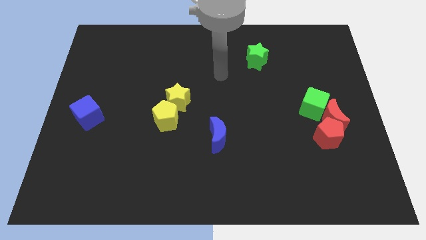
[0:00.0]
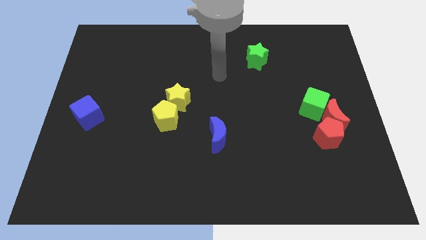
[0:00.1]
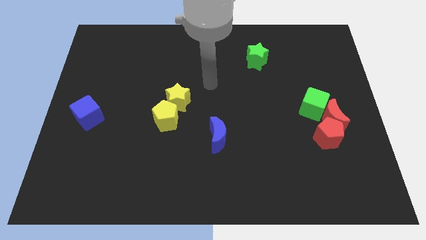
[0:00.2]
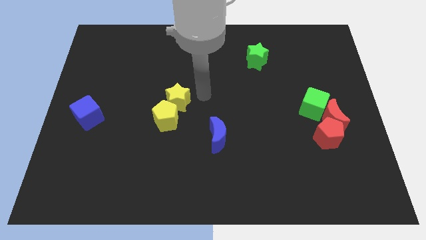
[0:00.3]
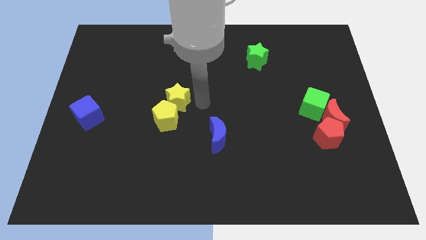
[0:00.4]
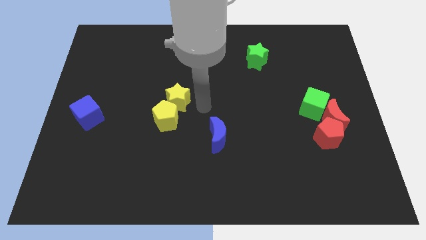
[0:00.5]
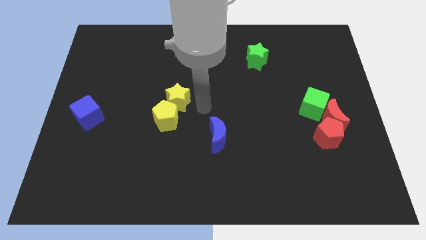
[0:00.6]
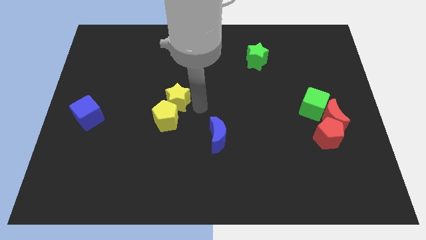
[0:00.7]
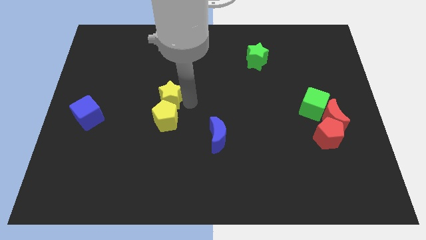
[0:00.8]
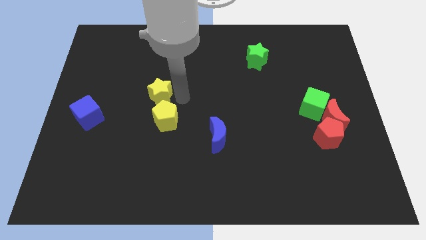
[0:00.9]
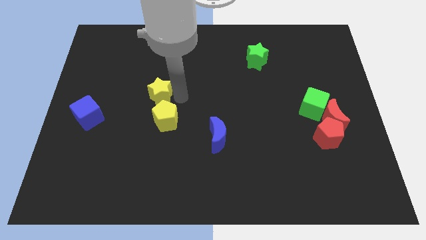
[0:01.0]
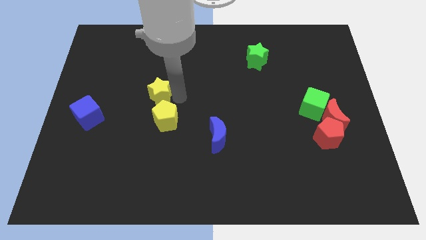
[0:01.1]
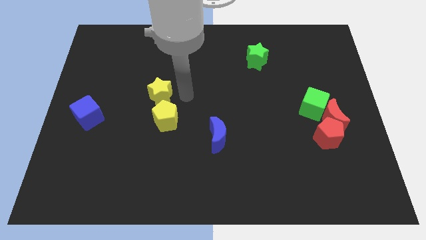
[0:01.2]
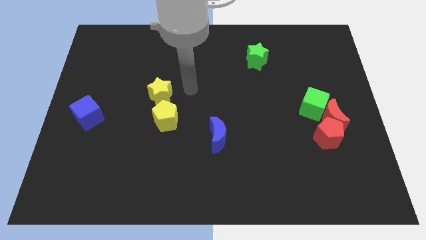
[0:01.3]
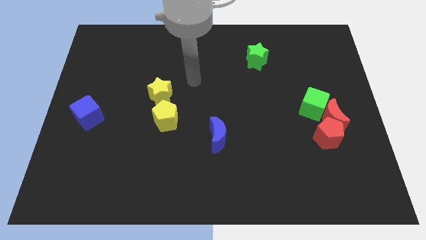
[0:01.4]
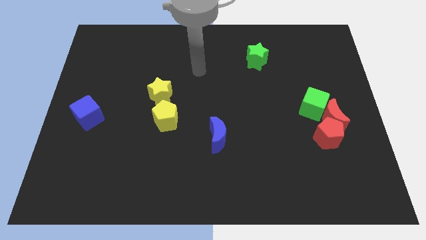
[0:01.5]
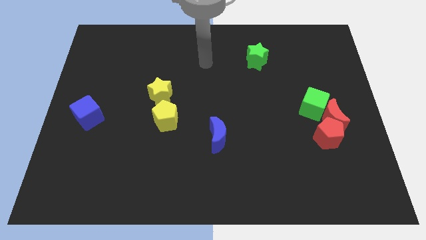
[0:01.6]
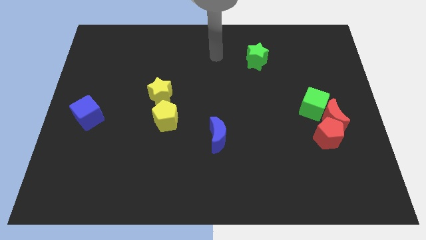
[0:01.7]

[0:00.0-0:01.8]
move the yellow star to the left side slightly

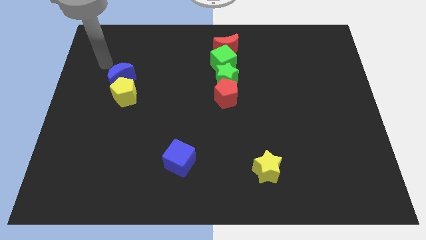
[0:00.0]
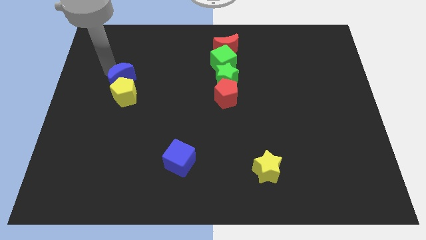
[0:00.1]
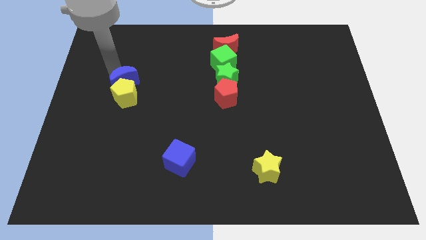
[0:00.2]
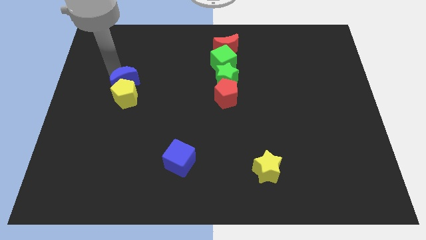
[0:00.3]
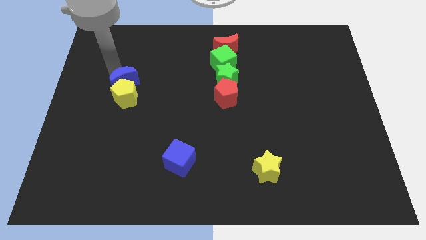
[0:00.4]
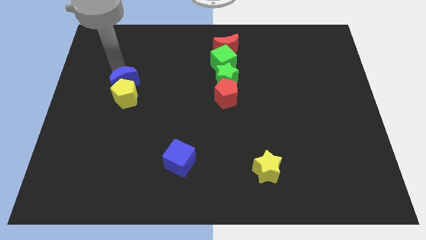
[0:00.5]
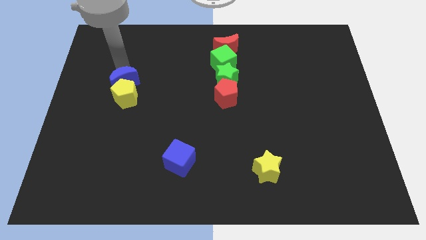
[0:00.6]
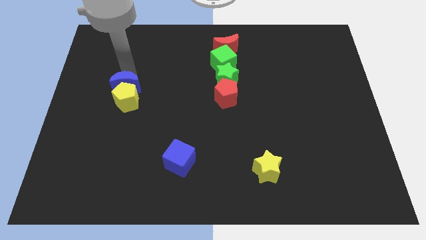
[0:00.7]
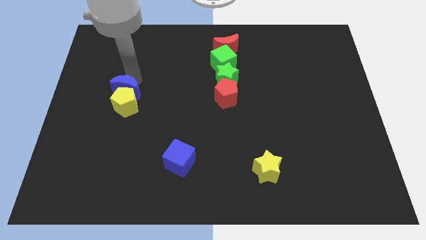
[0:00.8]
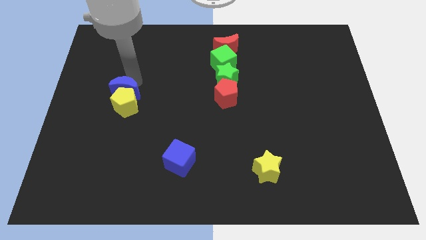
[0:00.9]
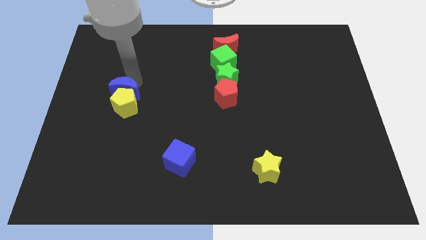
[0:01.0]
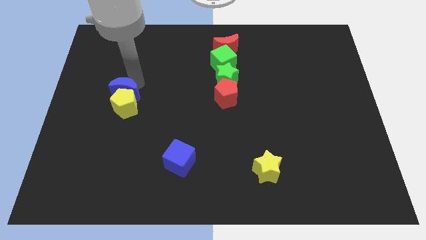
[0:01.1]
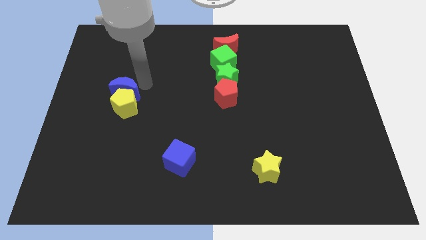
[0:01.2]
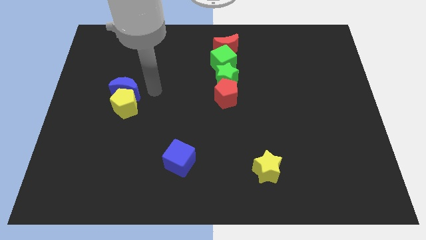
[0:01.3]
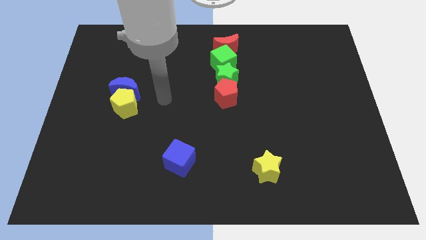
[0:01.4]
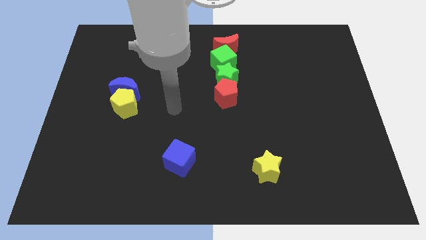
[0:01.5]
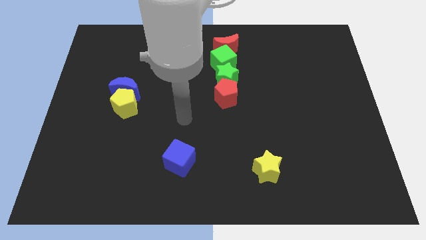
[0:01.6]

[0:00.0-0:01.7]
push the blue crescent into the yellow pentagon slightly towards the bottom

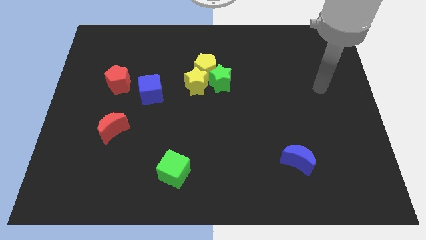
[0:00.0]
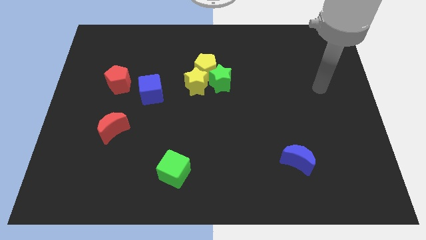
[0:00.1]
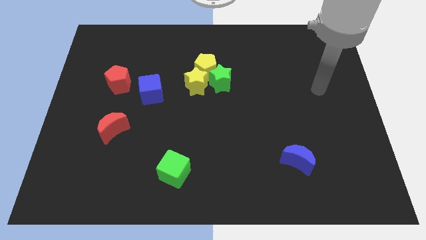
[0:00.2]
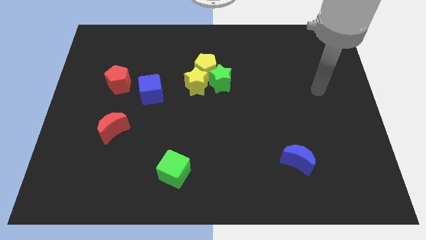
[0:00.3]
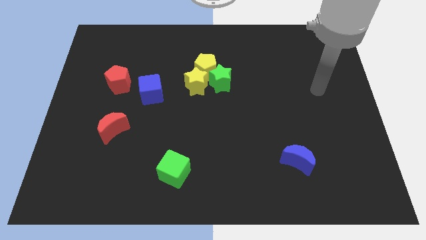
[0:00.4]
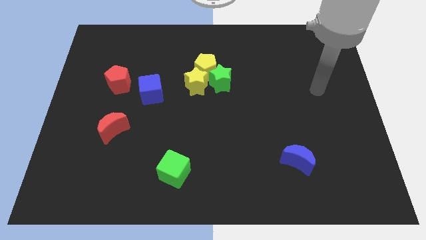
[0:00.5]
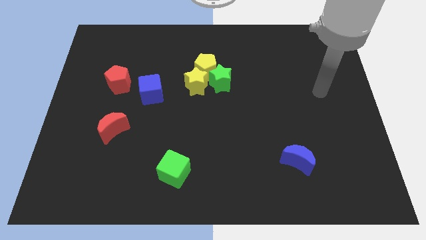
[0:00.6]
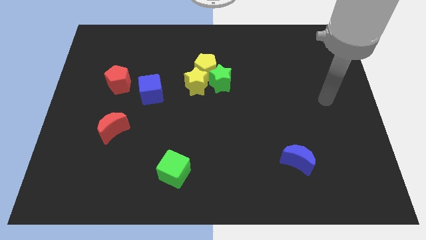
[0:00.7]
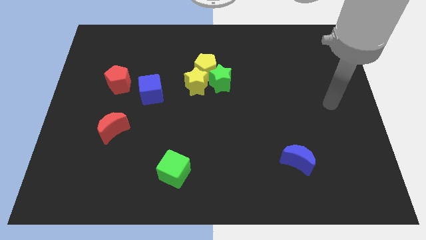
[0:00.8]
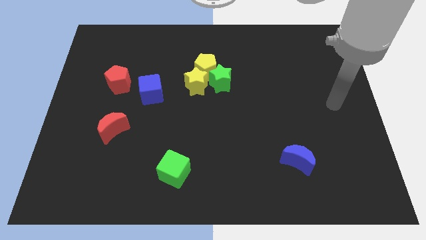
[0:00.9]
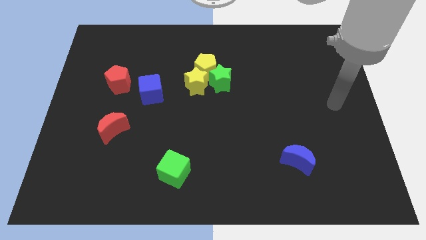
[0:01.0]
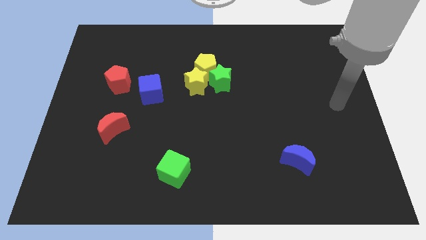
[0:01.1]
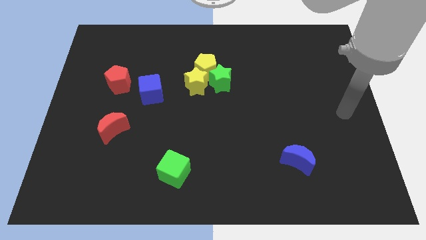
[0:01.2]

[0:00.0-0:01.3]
push arm on the center right of board

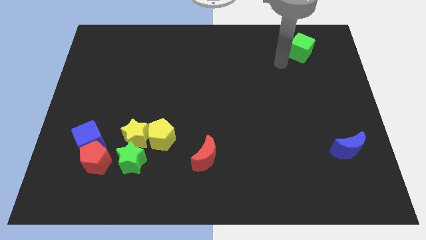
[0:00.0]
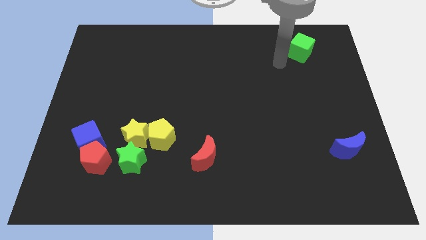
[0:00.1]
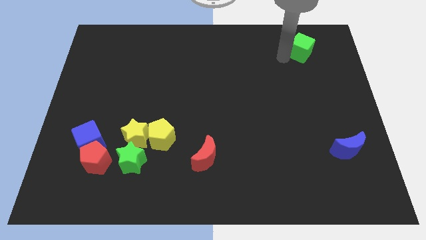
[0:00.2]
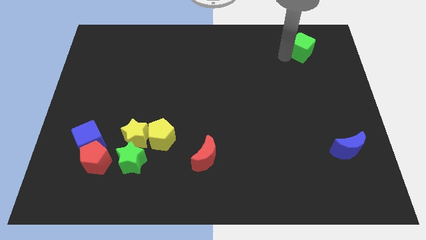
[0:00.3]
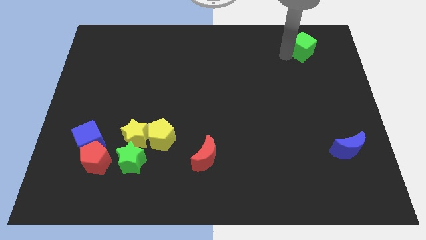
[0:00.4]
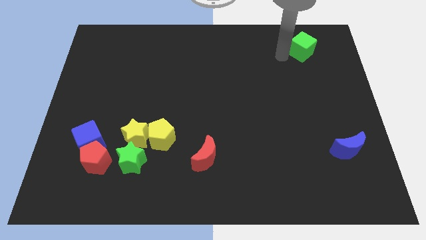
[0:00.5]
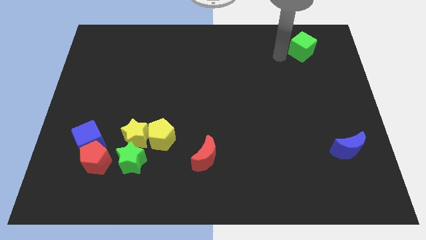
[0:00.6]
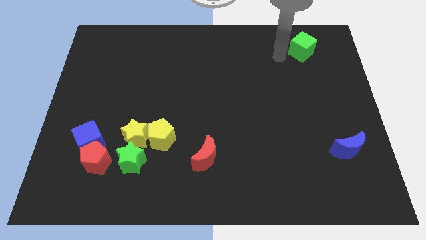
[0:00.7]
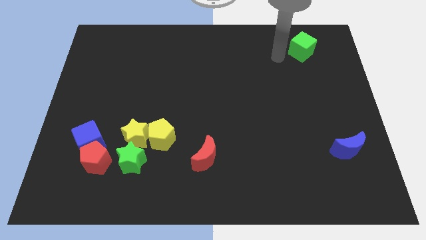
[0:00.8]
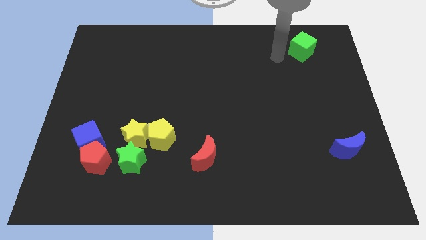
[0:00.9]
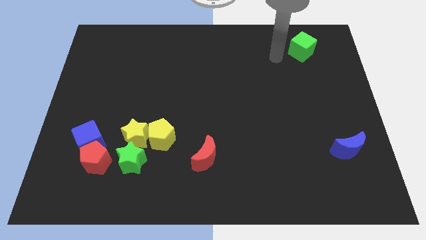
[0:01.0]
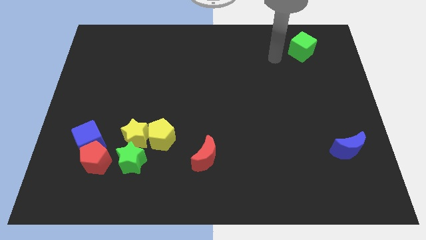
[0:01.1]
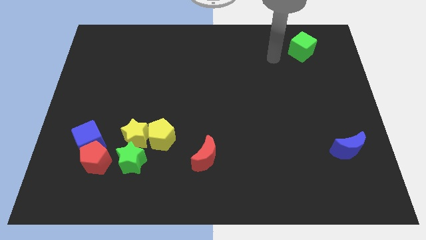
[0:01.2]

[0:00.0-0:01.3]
push the green cube towards the top right side of the board

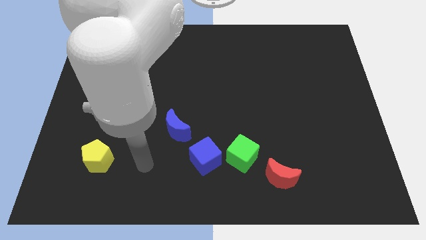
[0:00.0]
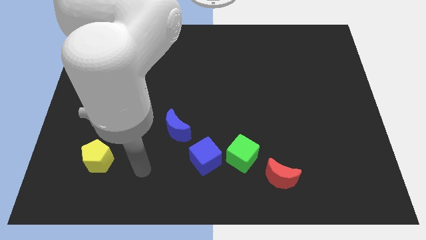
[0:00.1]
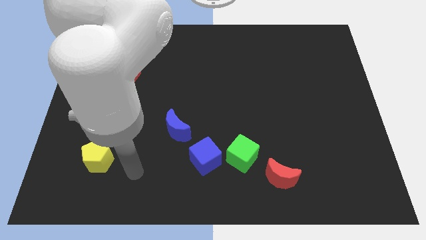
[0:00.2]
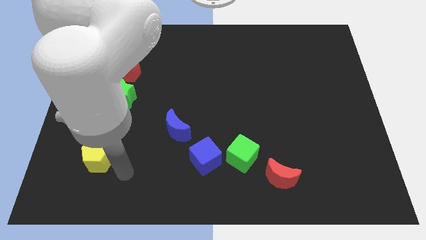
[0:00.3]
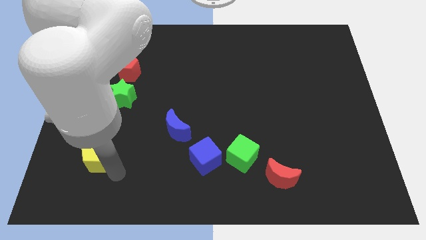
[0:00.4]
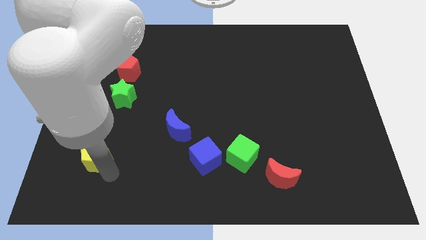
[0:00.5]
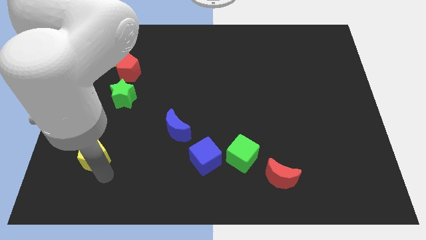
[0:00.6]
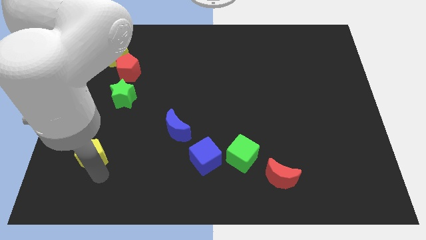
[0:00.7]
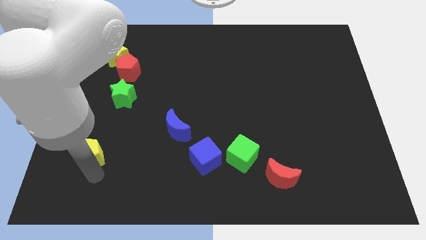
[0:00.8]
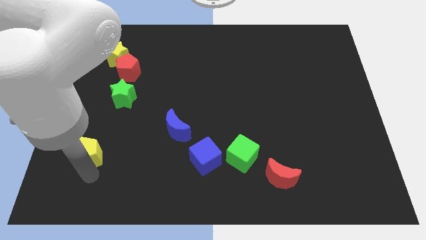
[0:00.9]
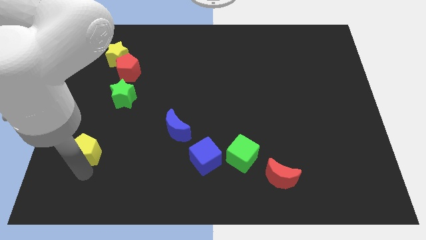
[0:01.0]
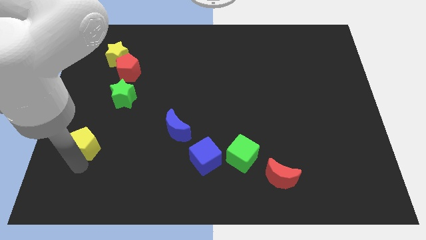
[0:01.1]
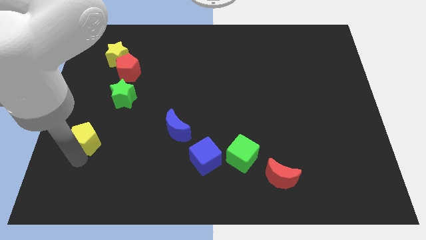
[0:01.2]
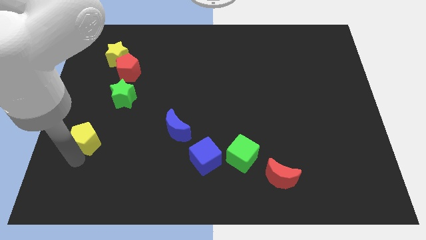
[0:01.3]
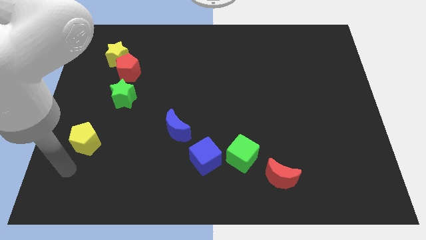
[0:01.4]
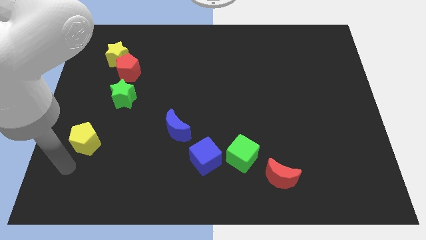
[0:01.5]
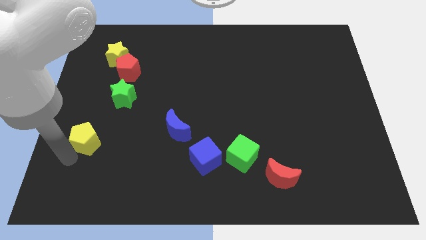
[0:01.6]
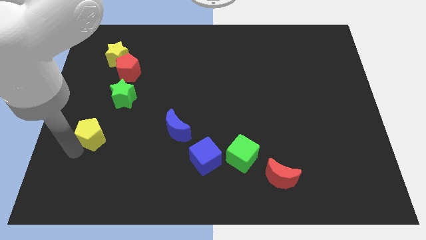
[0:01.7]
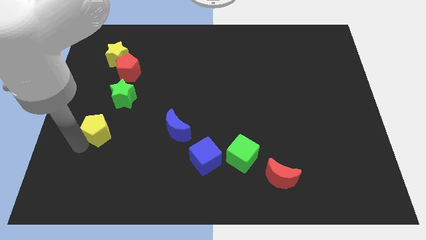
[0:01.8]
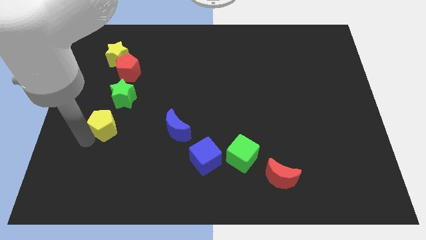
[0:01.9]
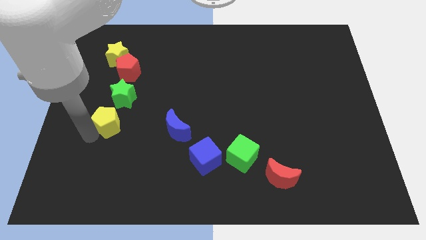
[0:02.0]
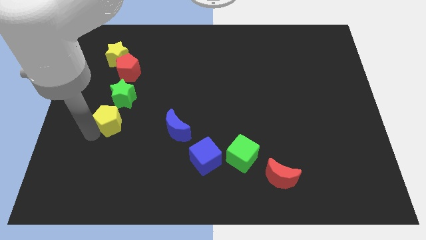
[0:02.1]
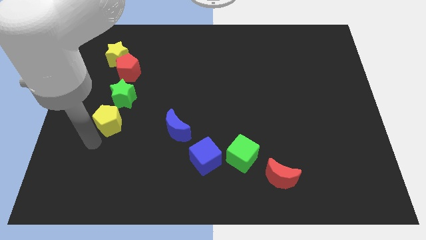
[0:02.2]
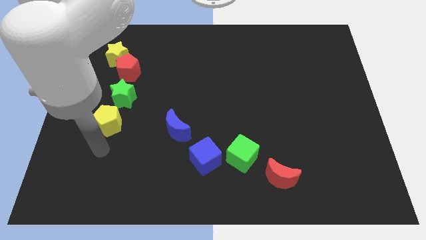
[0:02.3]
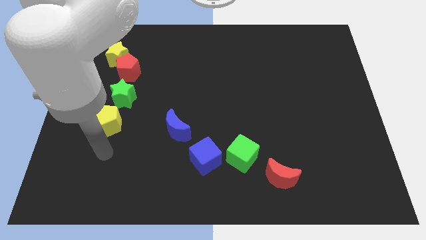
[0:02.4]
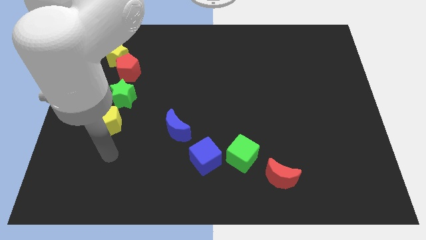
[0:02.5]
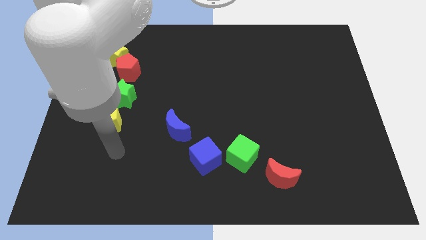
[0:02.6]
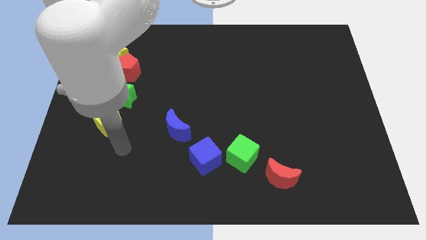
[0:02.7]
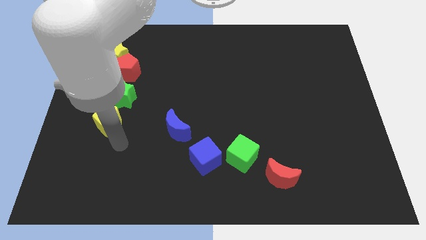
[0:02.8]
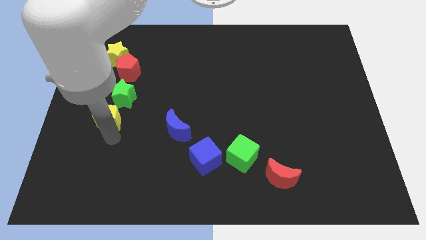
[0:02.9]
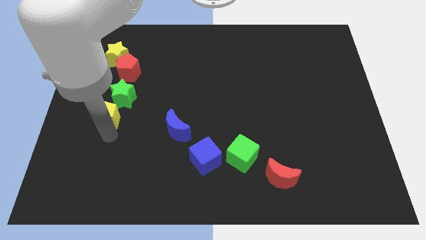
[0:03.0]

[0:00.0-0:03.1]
place the yellow pentagon to the bottom left of the green star
